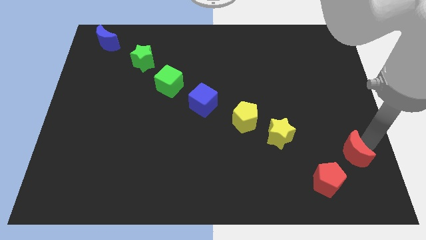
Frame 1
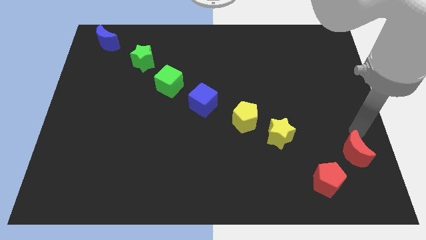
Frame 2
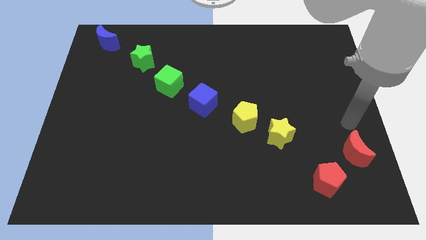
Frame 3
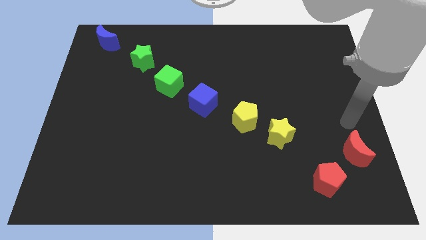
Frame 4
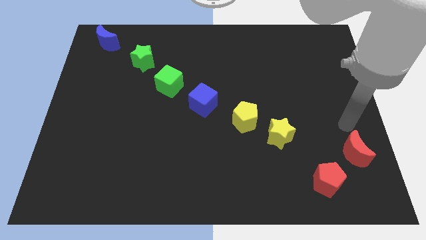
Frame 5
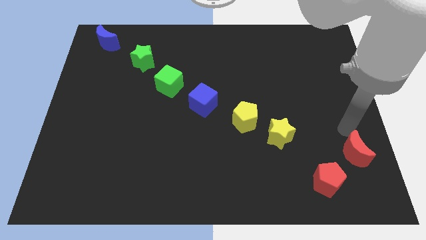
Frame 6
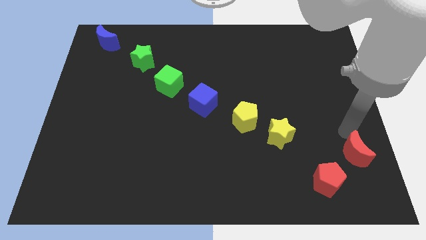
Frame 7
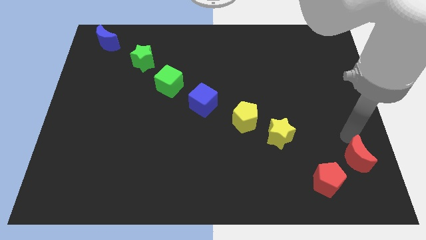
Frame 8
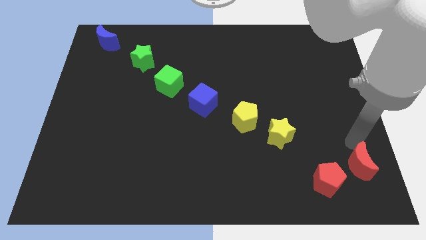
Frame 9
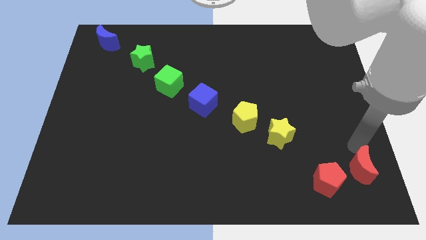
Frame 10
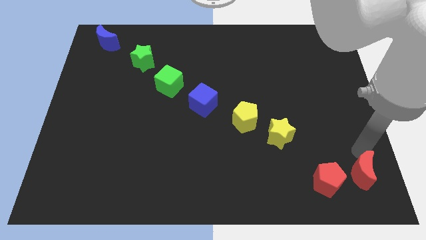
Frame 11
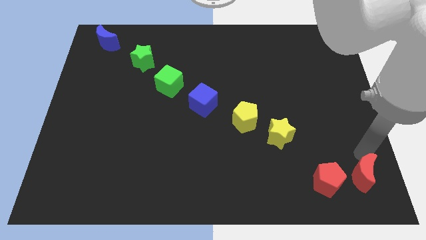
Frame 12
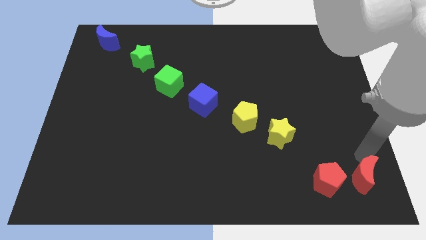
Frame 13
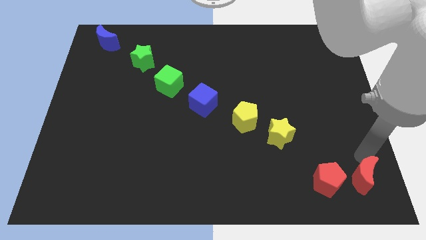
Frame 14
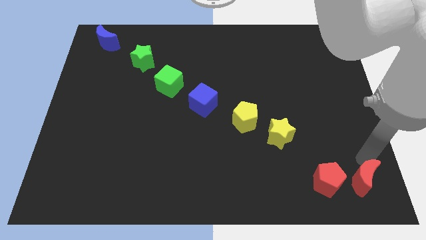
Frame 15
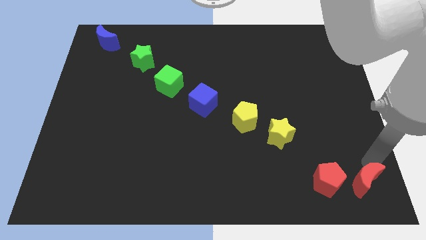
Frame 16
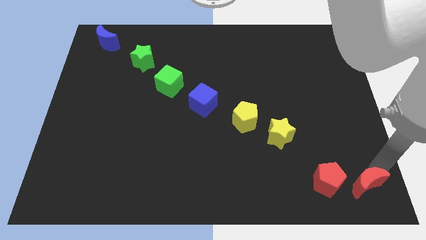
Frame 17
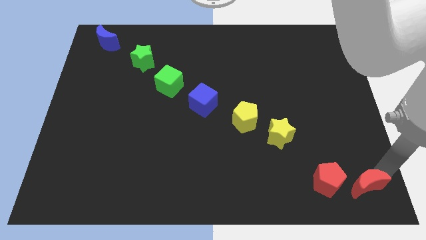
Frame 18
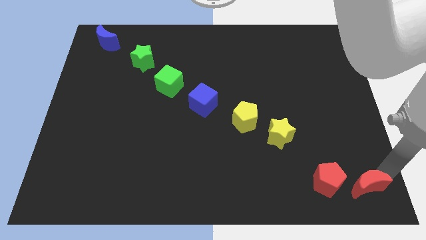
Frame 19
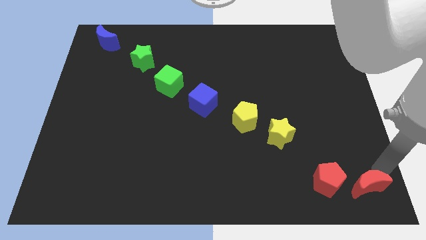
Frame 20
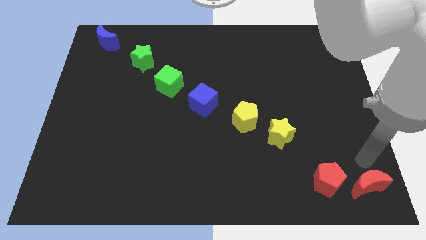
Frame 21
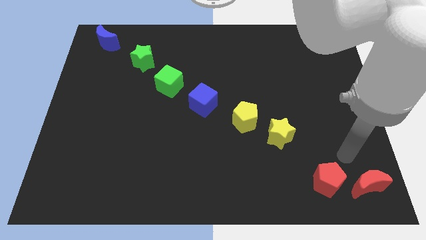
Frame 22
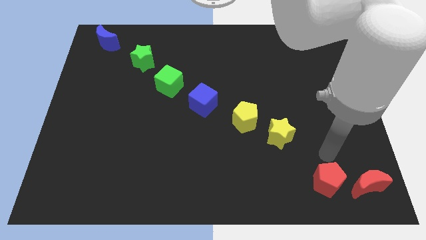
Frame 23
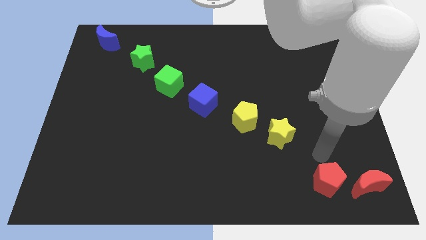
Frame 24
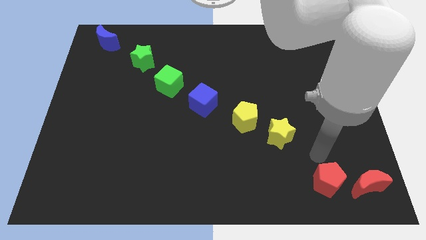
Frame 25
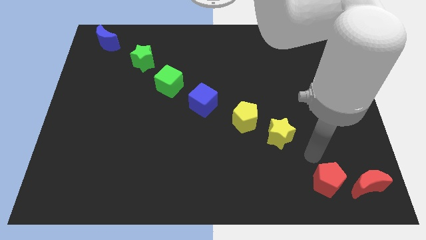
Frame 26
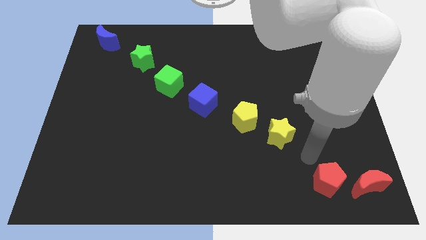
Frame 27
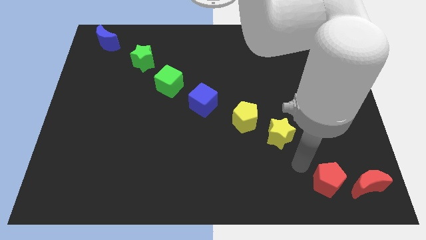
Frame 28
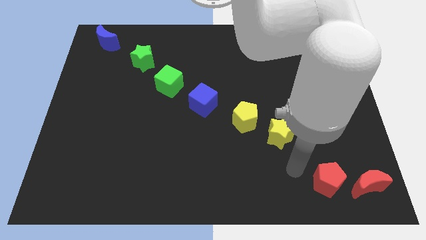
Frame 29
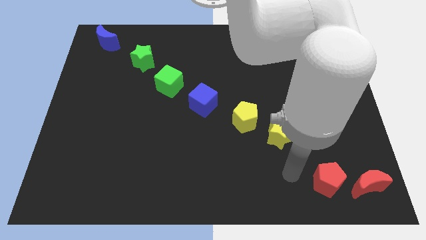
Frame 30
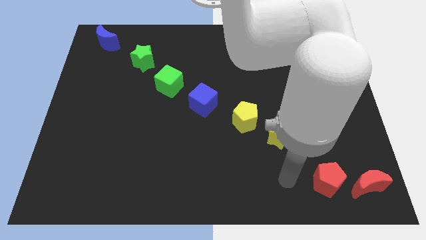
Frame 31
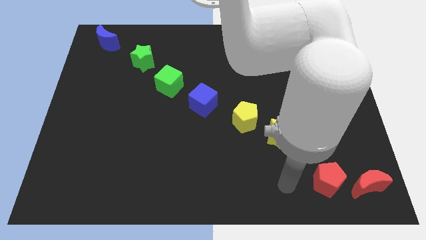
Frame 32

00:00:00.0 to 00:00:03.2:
move red pentagon to bottom right corner

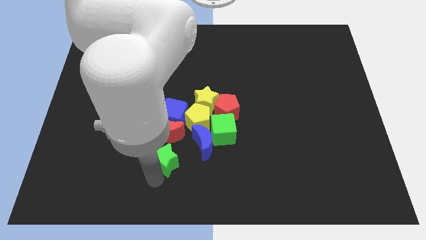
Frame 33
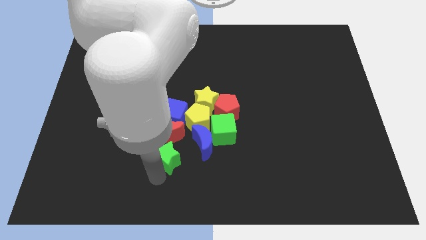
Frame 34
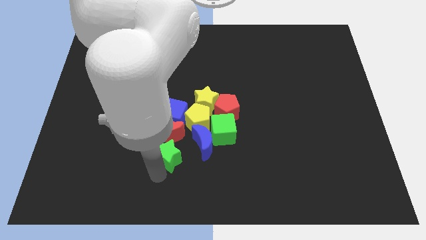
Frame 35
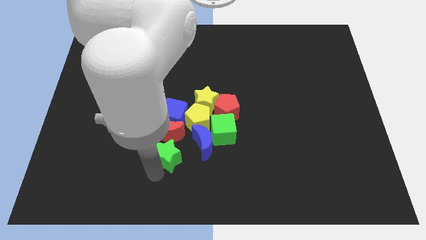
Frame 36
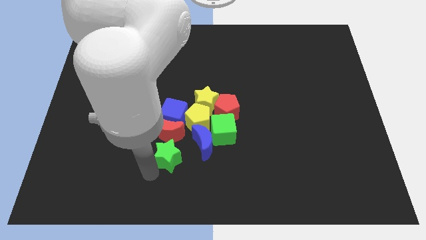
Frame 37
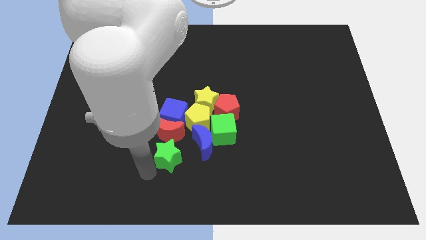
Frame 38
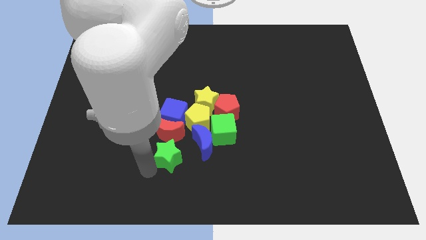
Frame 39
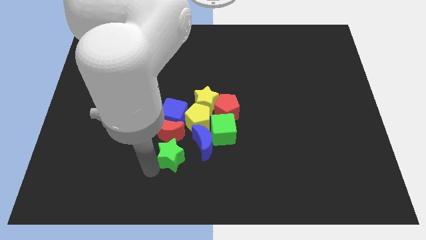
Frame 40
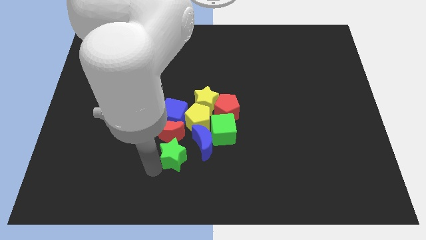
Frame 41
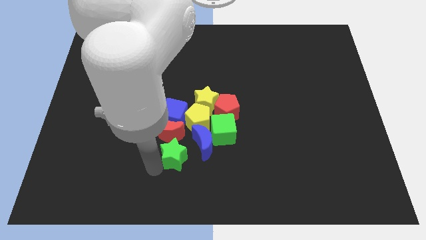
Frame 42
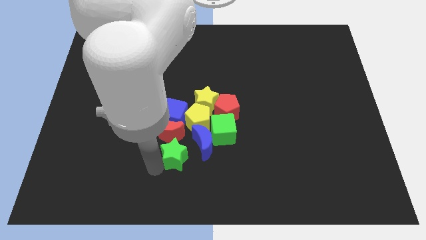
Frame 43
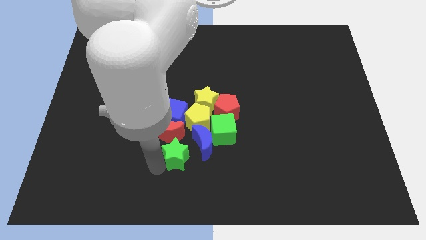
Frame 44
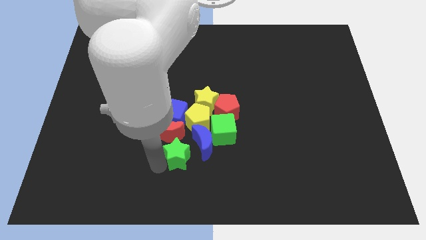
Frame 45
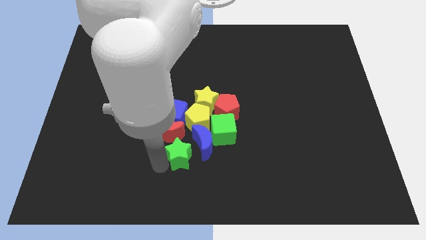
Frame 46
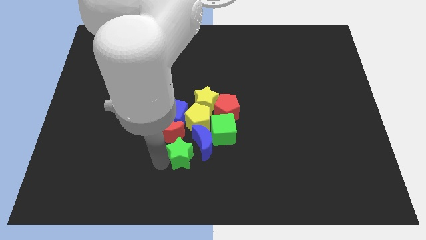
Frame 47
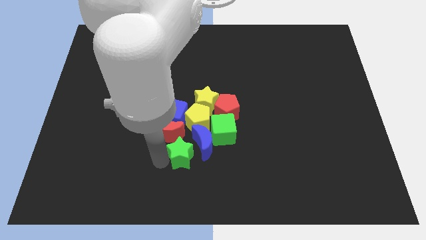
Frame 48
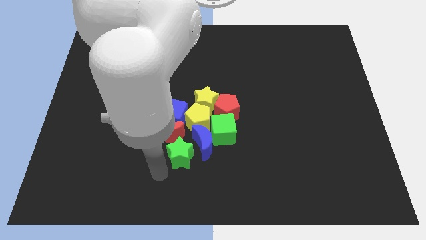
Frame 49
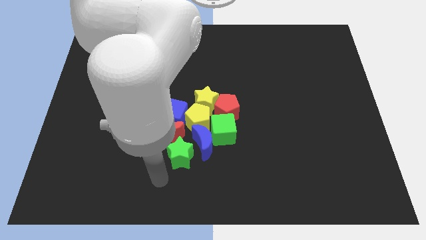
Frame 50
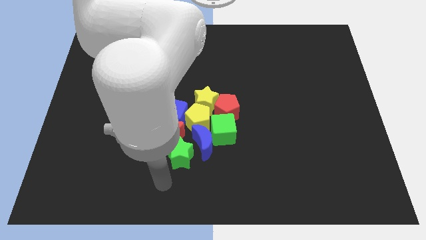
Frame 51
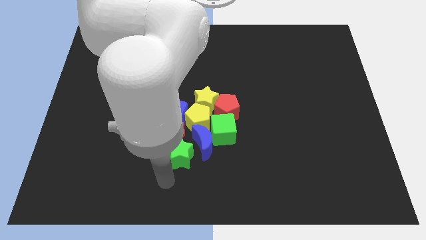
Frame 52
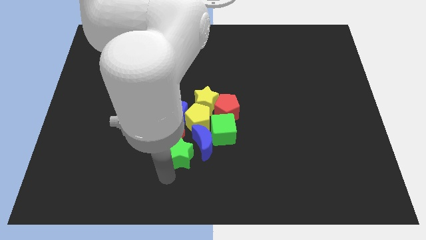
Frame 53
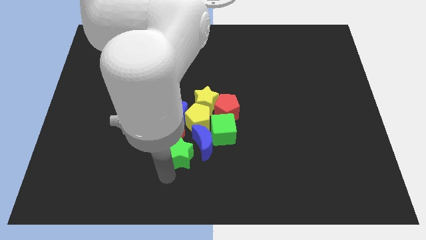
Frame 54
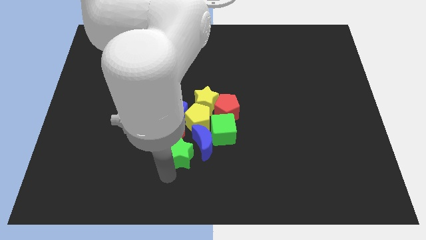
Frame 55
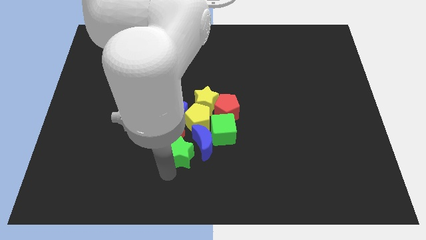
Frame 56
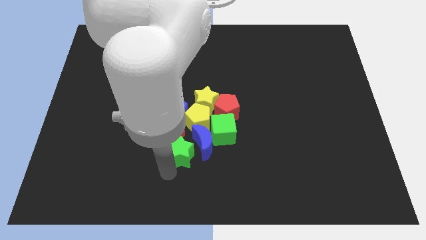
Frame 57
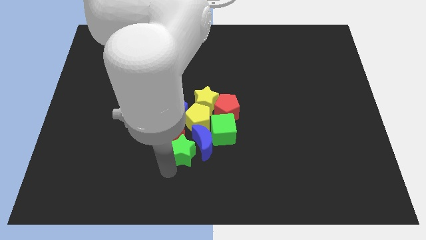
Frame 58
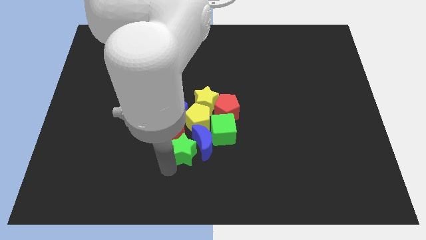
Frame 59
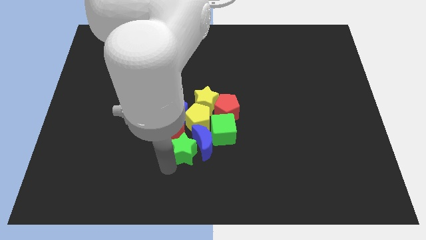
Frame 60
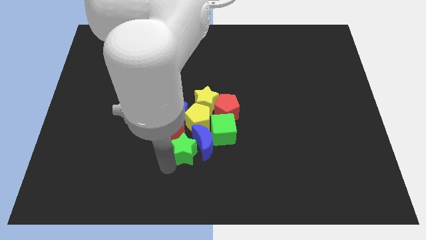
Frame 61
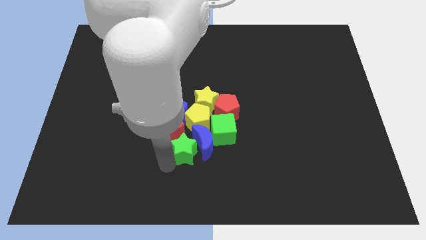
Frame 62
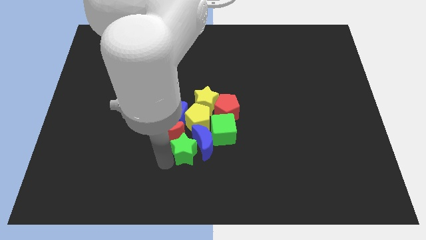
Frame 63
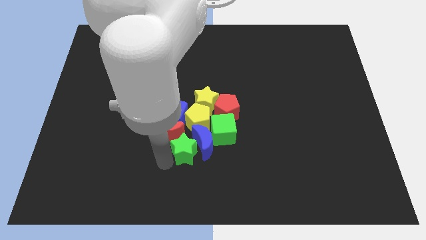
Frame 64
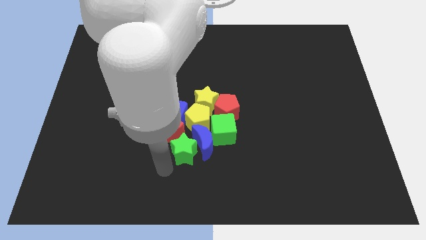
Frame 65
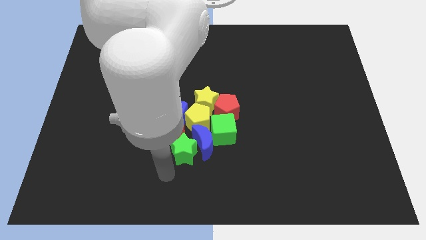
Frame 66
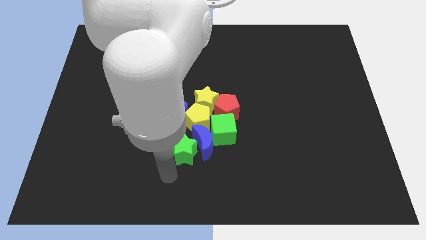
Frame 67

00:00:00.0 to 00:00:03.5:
place the green star to the left of the blue moon

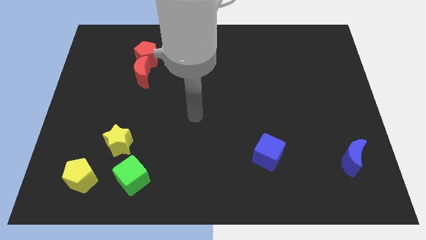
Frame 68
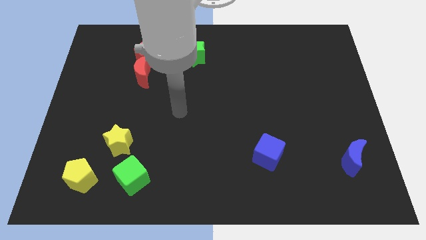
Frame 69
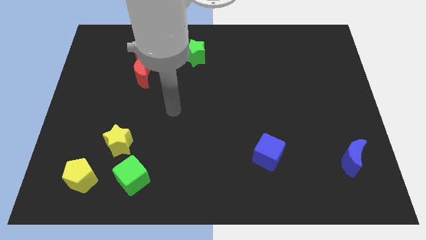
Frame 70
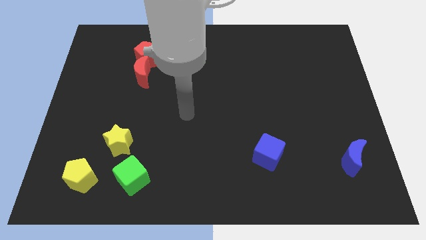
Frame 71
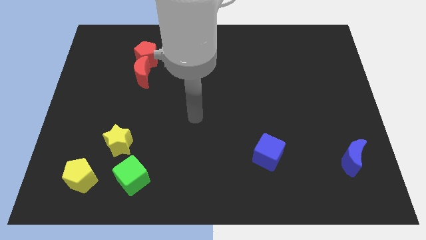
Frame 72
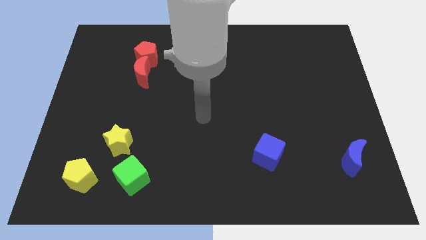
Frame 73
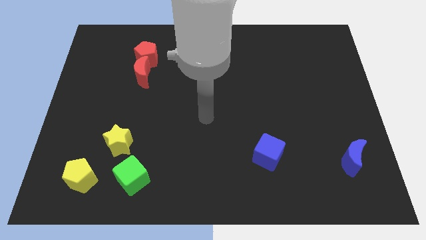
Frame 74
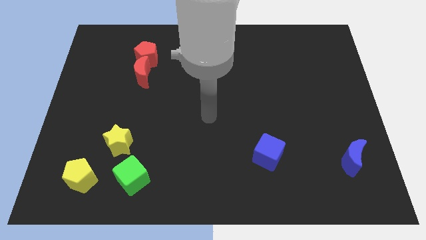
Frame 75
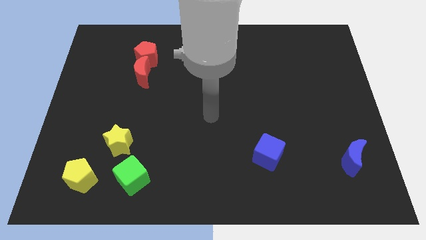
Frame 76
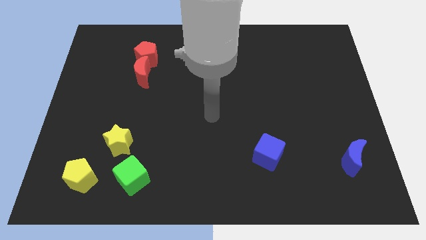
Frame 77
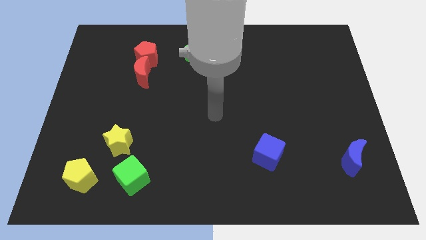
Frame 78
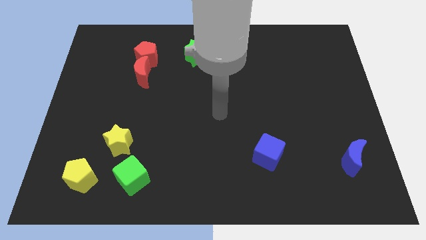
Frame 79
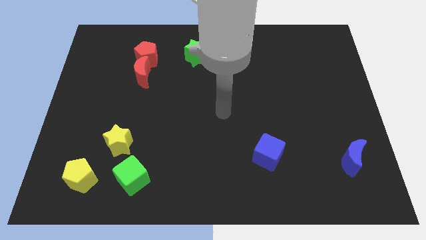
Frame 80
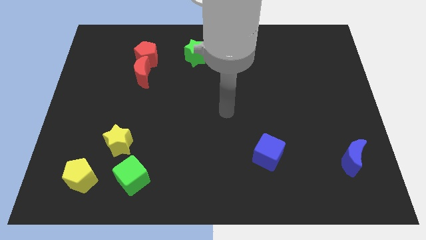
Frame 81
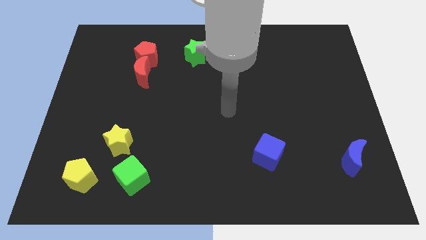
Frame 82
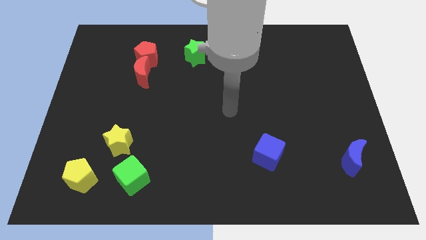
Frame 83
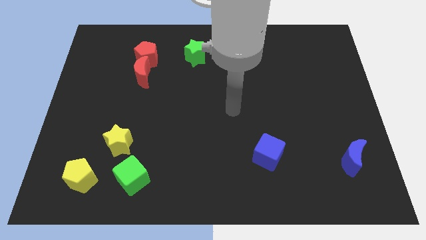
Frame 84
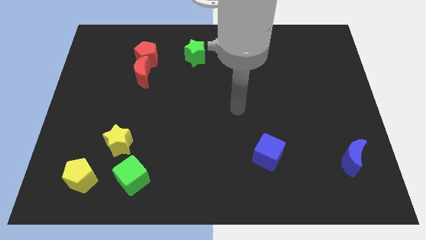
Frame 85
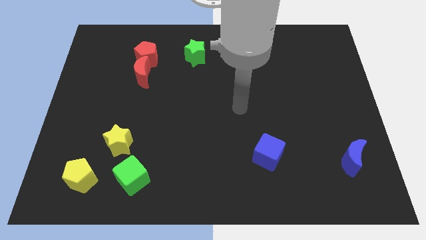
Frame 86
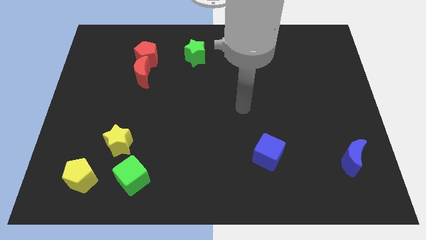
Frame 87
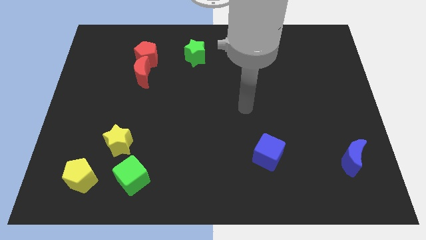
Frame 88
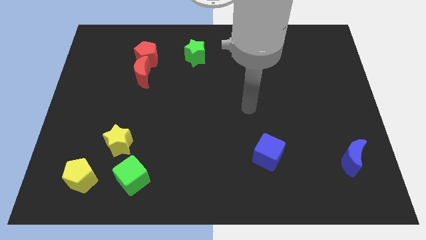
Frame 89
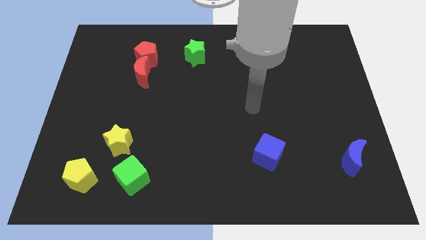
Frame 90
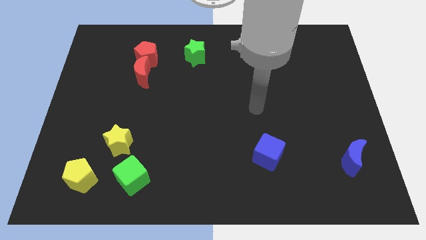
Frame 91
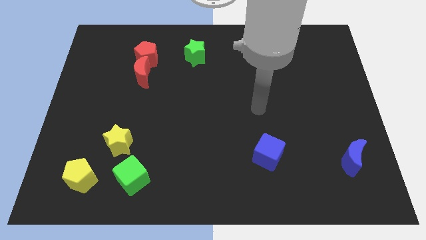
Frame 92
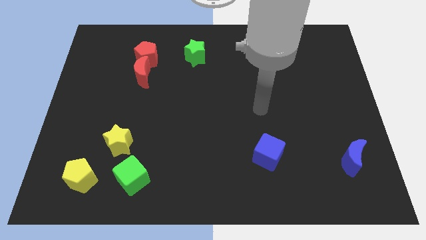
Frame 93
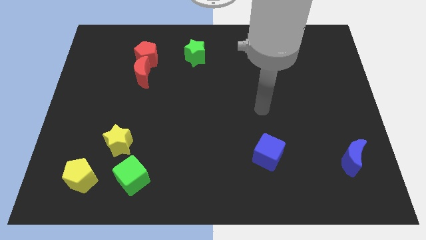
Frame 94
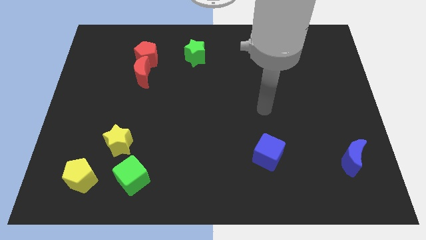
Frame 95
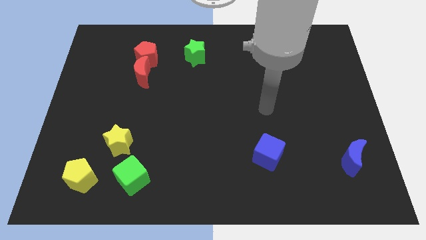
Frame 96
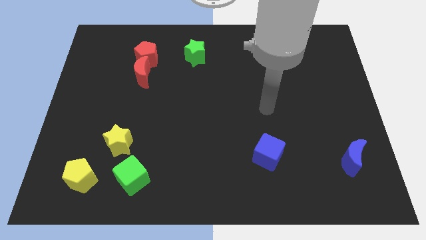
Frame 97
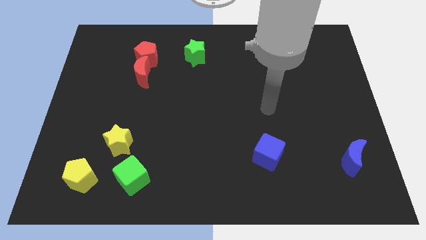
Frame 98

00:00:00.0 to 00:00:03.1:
move your arm and point on top of blue cube
